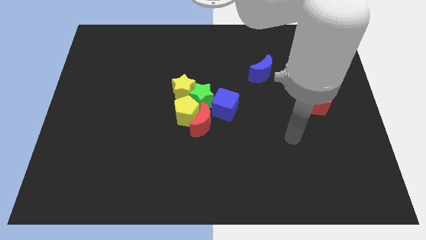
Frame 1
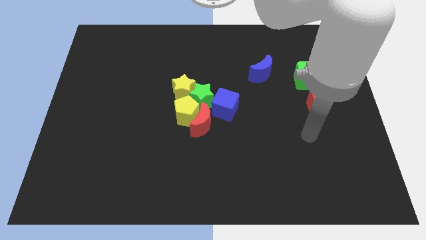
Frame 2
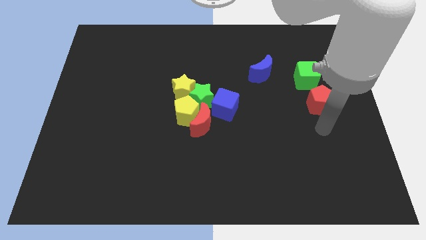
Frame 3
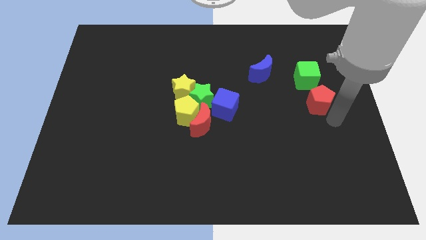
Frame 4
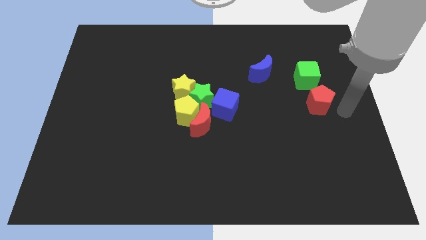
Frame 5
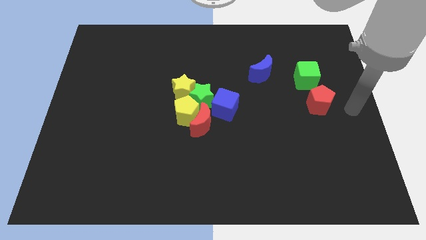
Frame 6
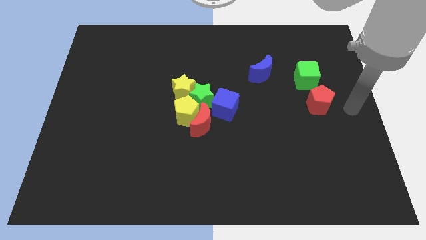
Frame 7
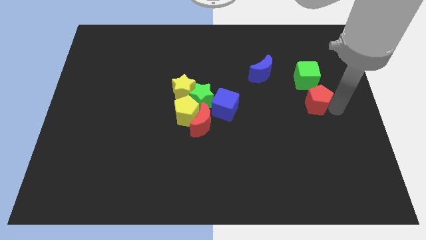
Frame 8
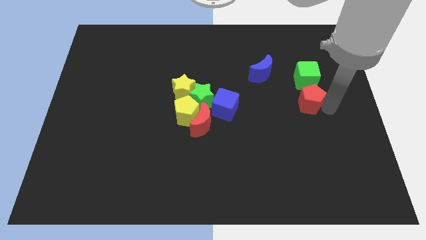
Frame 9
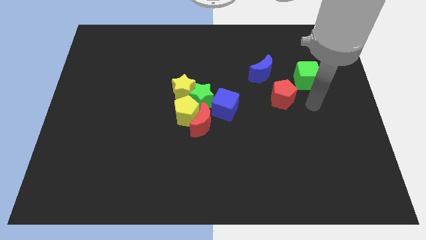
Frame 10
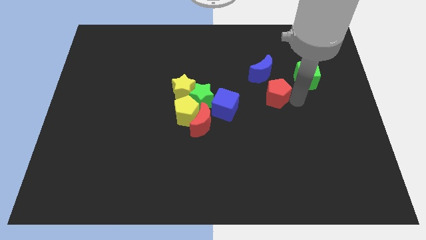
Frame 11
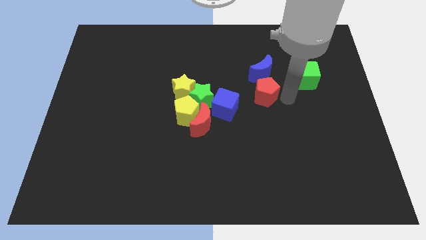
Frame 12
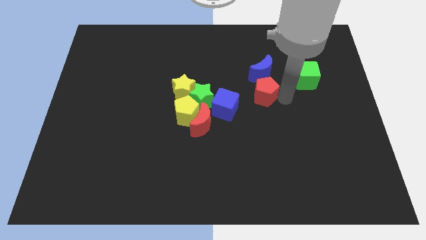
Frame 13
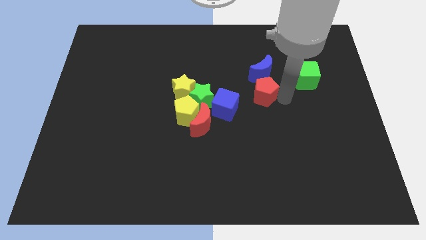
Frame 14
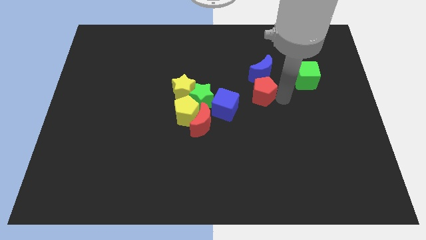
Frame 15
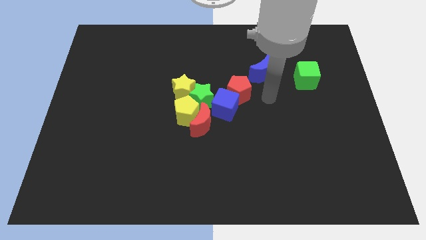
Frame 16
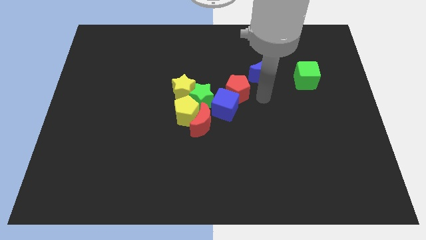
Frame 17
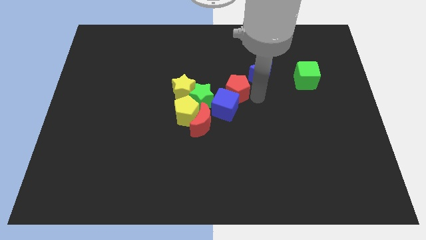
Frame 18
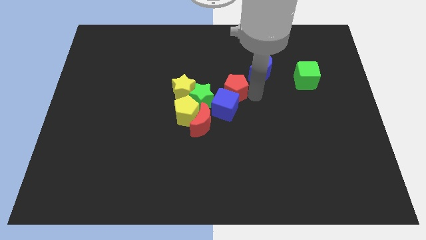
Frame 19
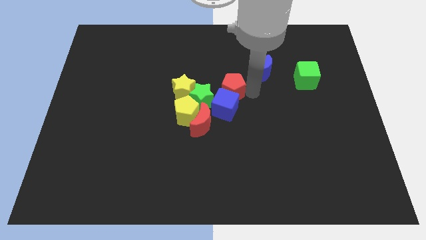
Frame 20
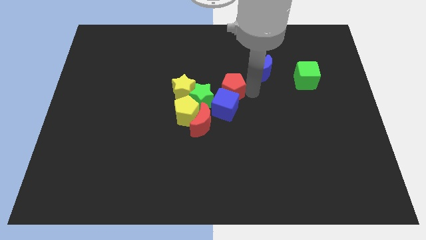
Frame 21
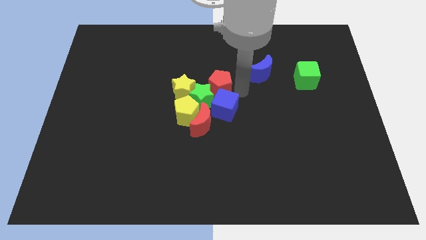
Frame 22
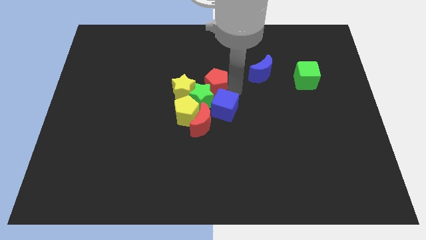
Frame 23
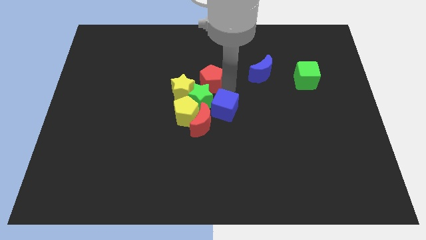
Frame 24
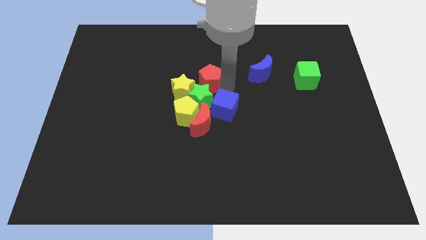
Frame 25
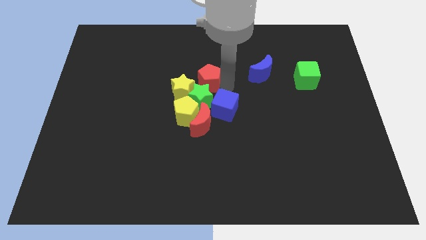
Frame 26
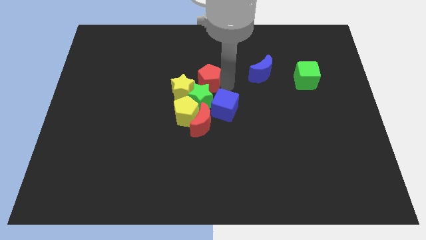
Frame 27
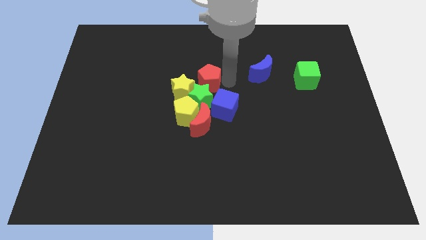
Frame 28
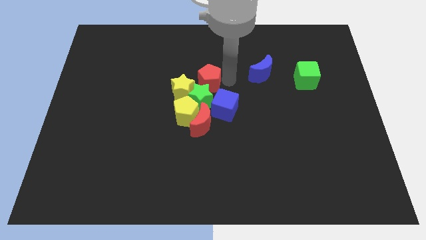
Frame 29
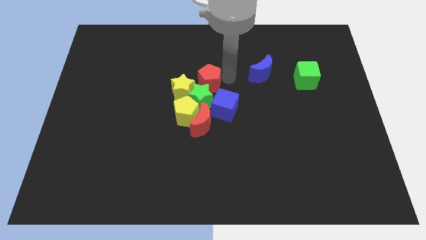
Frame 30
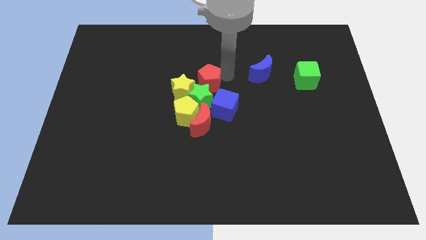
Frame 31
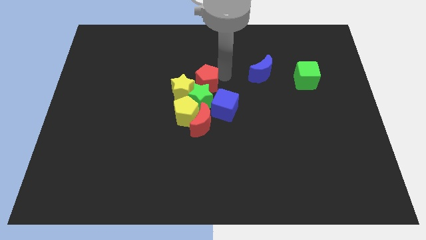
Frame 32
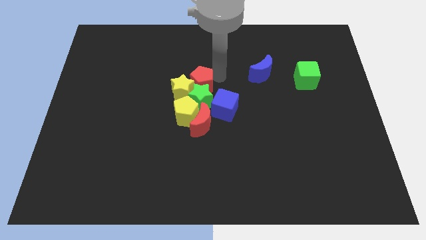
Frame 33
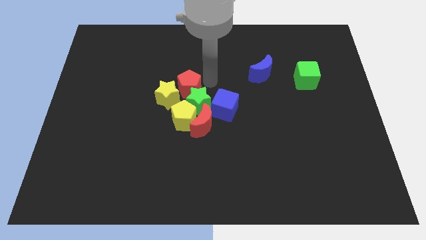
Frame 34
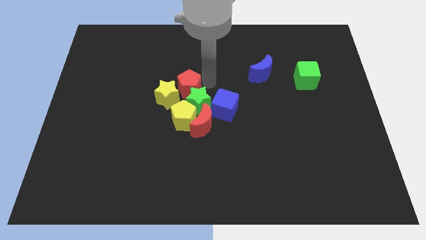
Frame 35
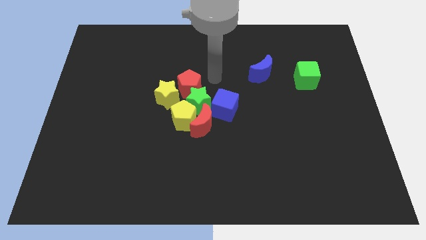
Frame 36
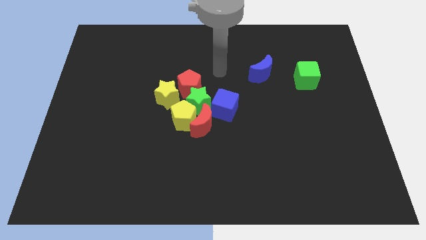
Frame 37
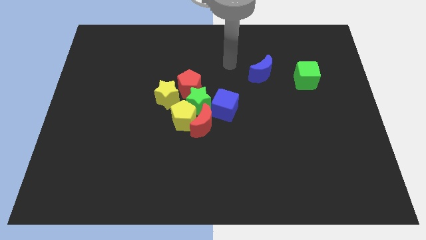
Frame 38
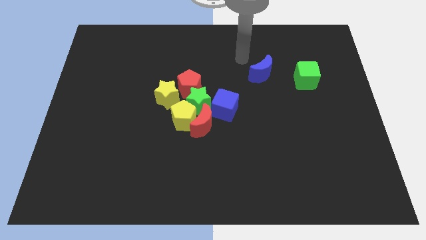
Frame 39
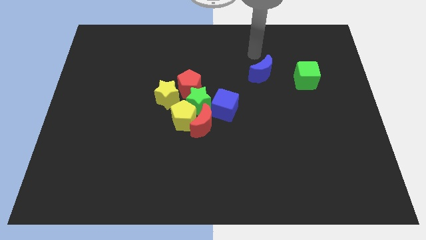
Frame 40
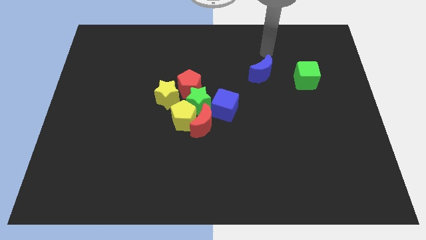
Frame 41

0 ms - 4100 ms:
push the red pentagon into the yellow star

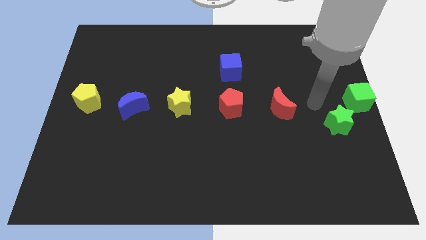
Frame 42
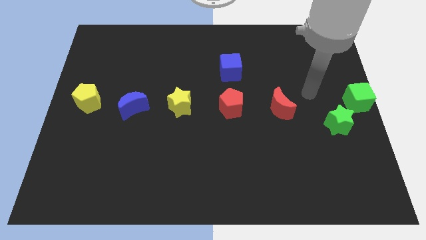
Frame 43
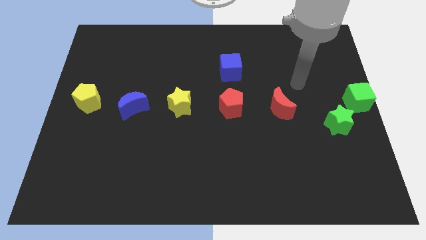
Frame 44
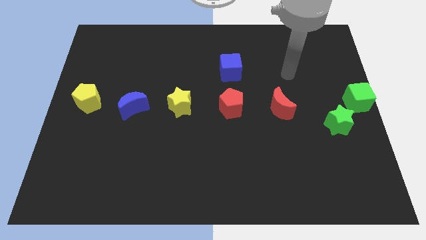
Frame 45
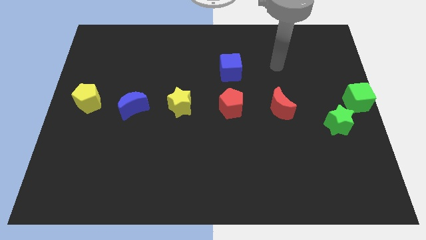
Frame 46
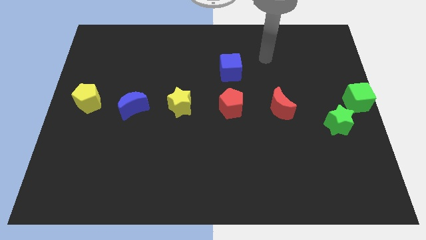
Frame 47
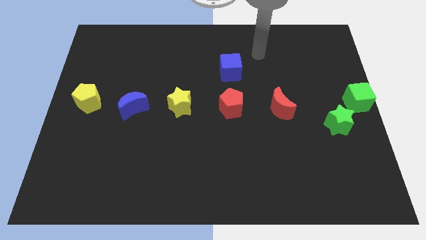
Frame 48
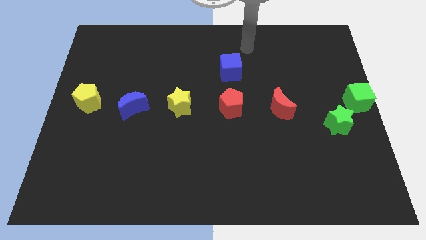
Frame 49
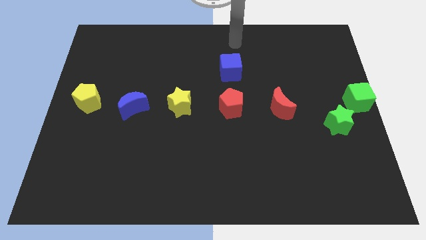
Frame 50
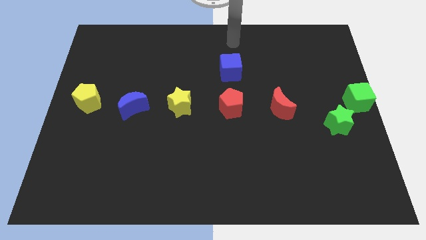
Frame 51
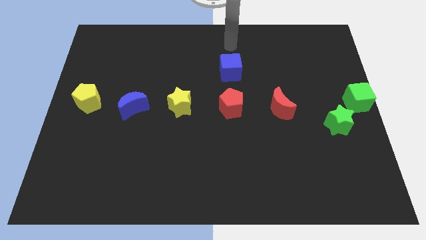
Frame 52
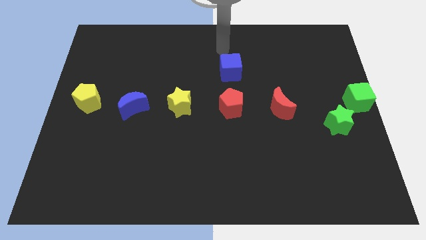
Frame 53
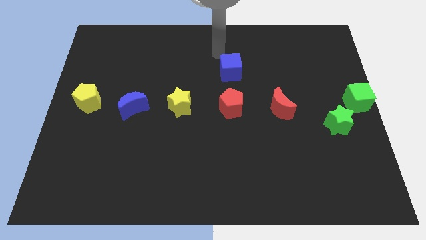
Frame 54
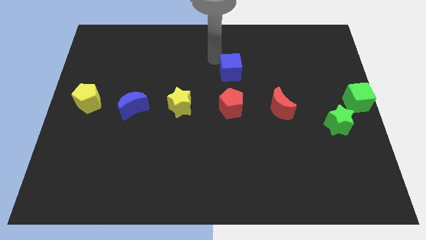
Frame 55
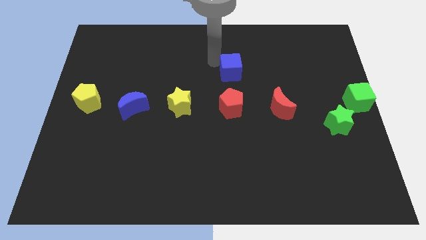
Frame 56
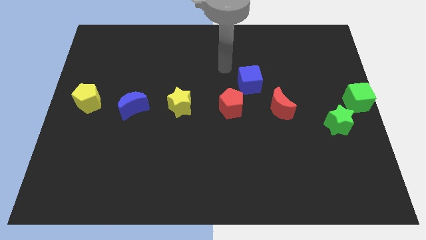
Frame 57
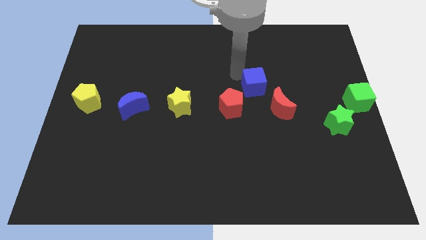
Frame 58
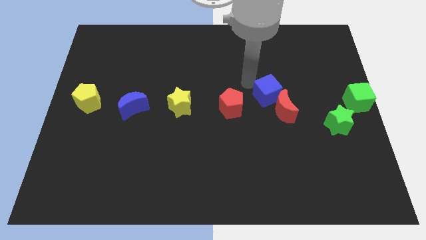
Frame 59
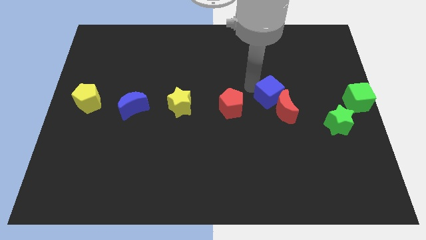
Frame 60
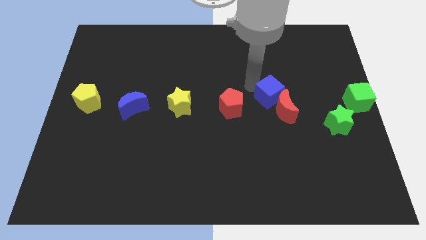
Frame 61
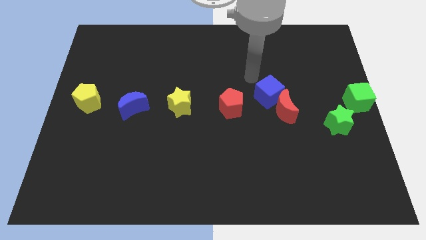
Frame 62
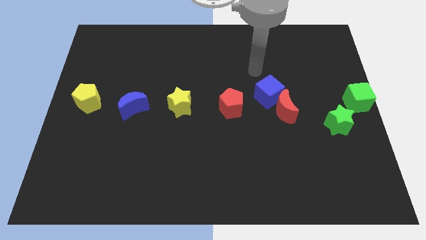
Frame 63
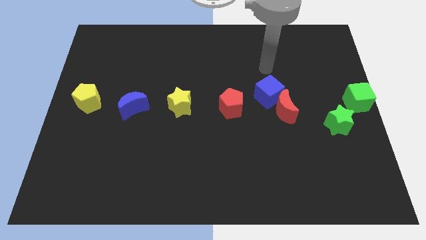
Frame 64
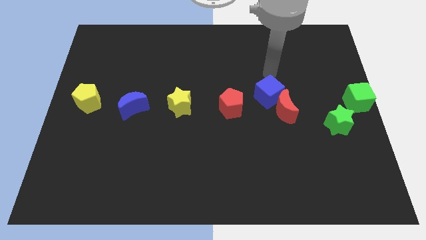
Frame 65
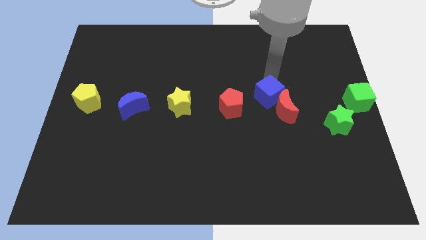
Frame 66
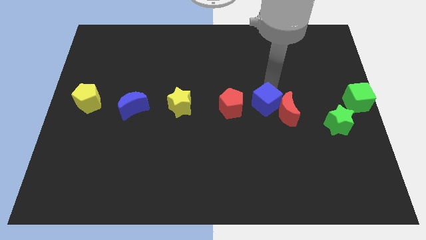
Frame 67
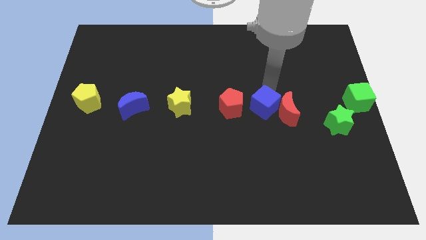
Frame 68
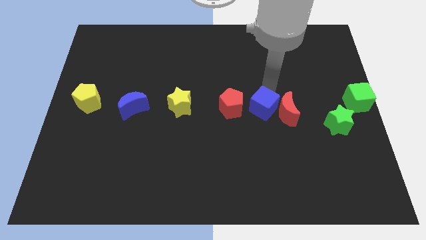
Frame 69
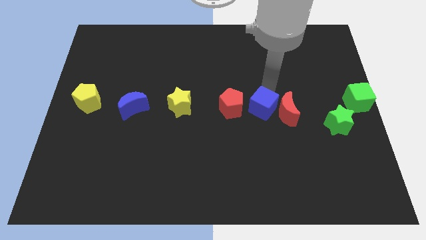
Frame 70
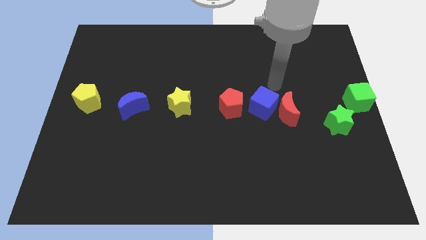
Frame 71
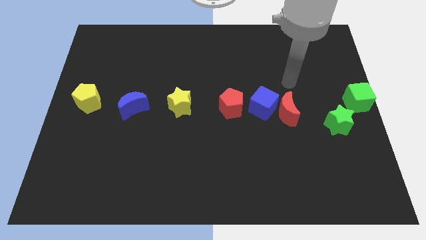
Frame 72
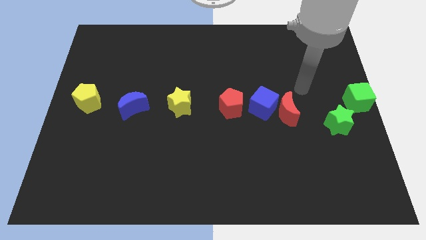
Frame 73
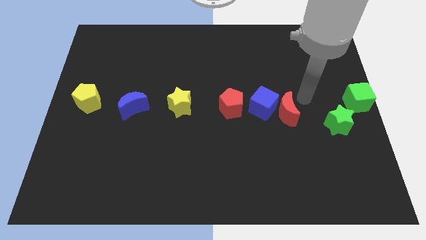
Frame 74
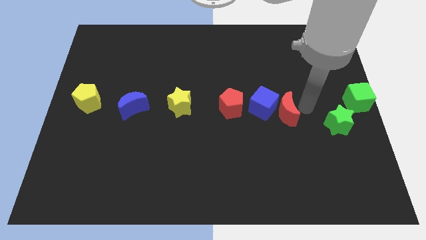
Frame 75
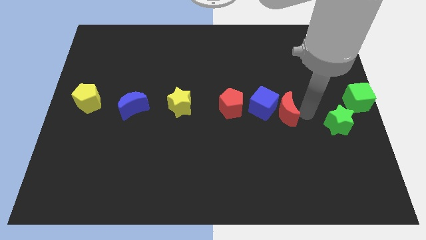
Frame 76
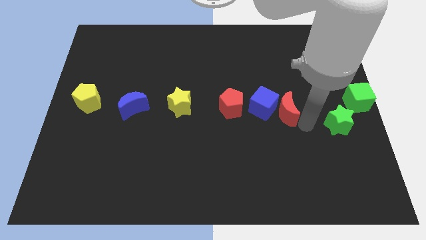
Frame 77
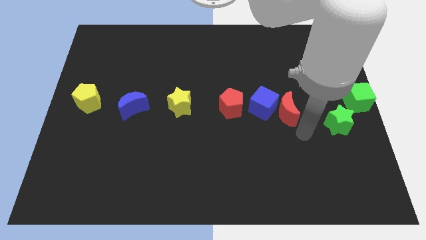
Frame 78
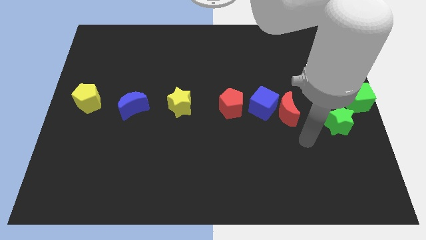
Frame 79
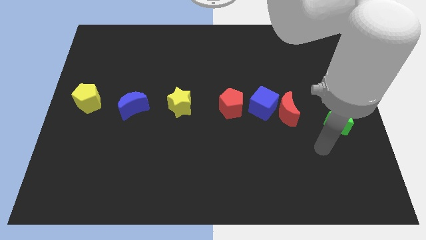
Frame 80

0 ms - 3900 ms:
place the blue cube in between the red blocks

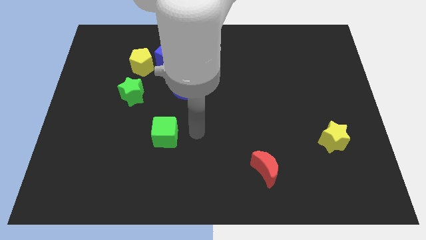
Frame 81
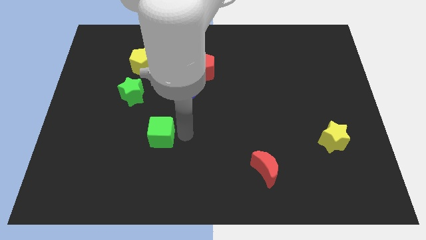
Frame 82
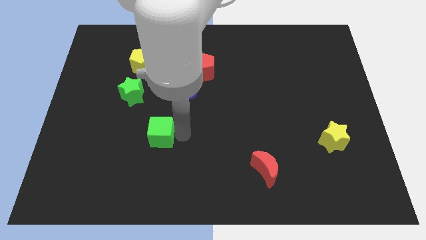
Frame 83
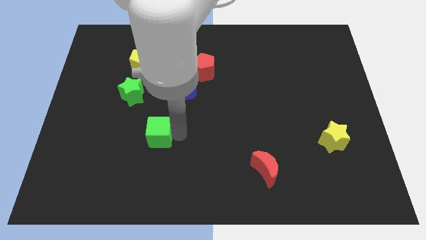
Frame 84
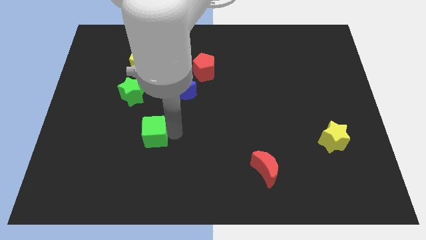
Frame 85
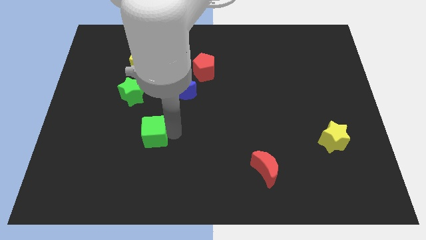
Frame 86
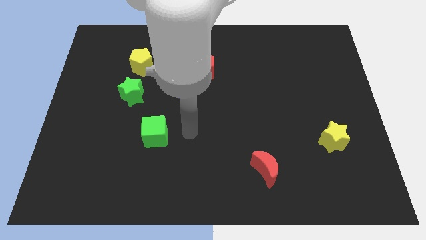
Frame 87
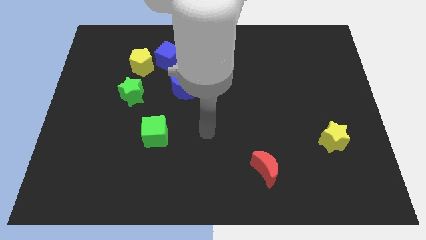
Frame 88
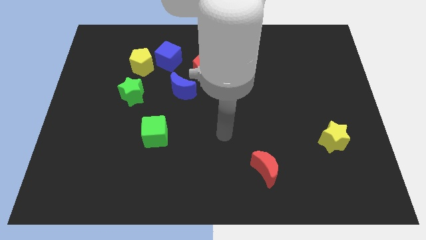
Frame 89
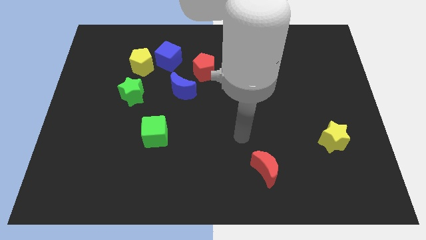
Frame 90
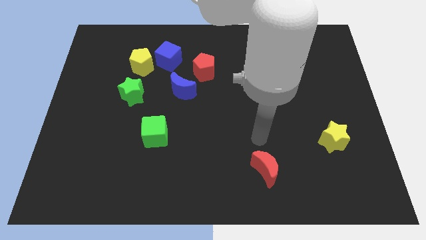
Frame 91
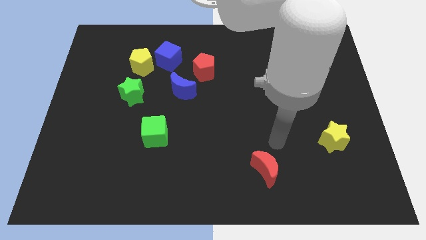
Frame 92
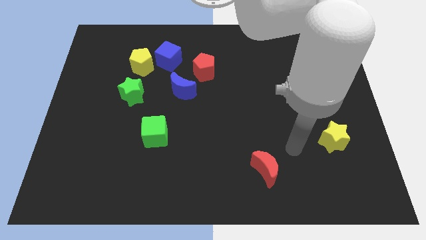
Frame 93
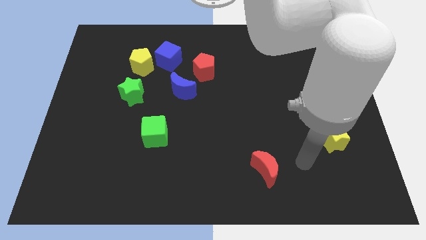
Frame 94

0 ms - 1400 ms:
move your arm around the the red moon
